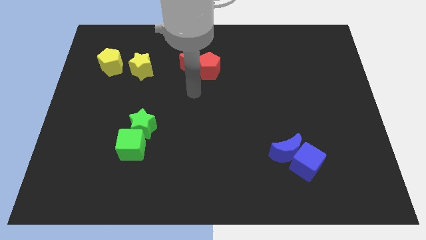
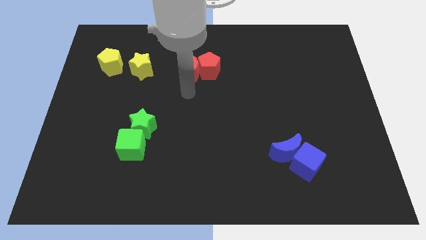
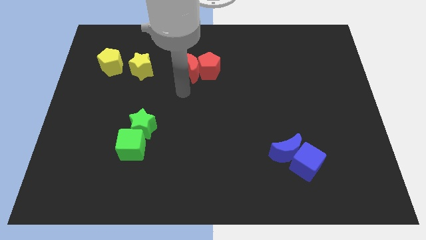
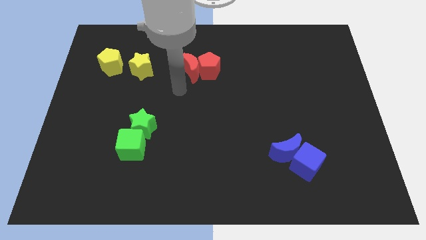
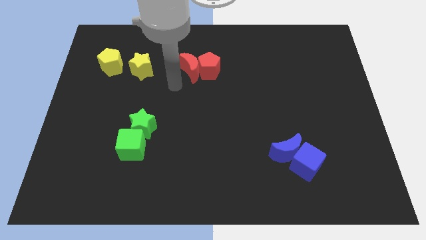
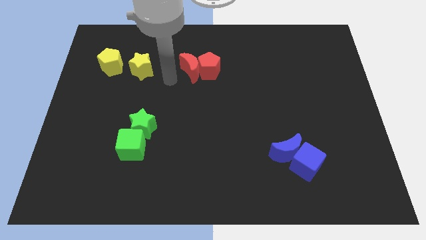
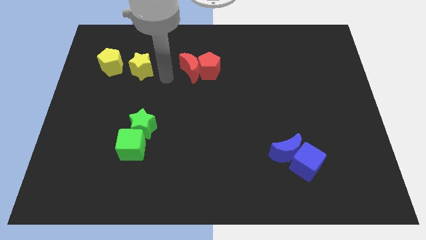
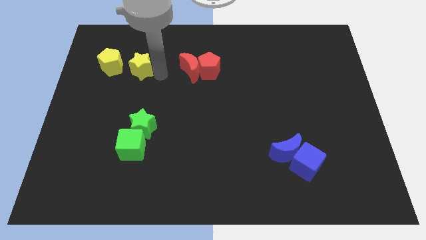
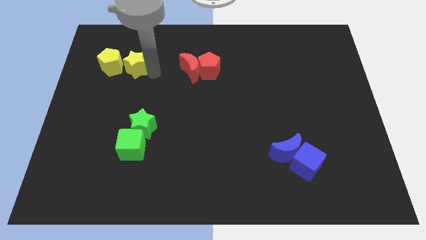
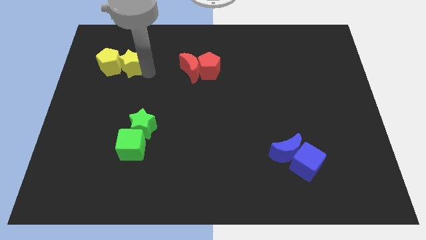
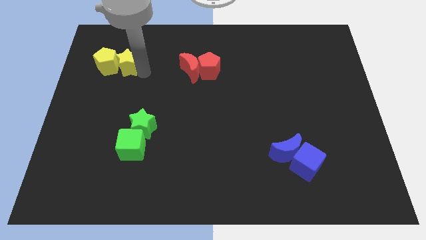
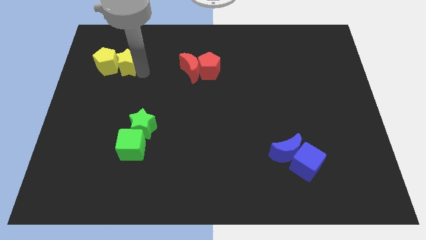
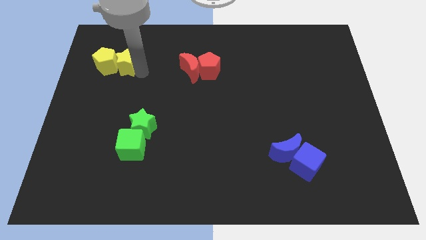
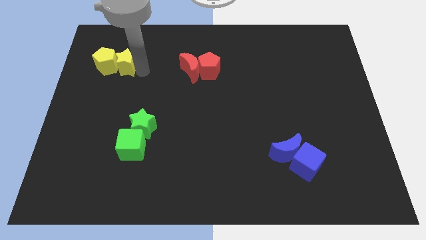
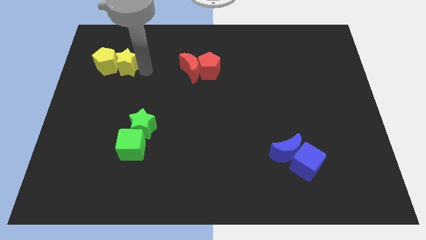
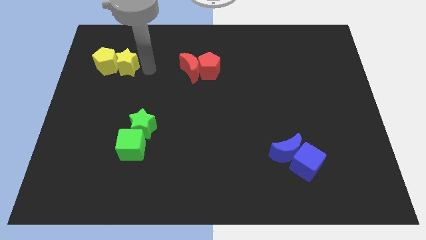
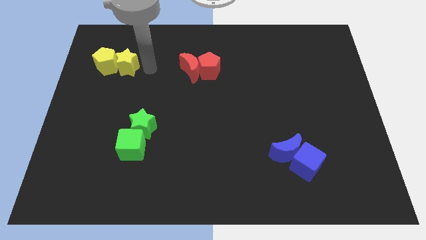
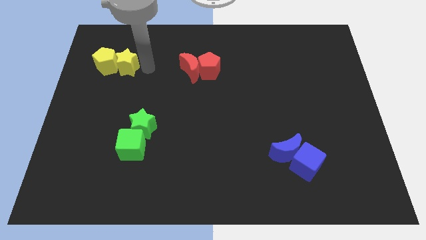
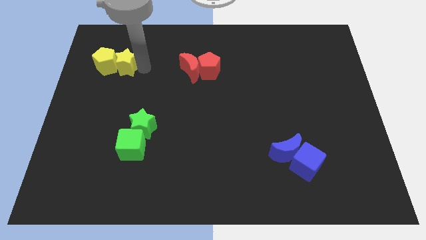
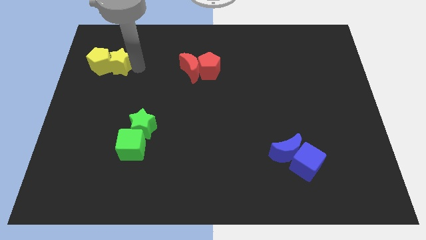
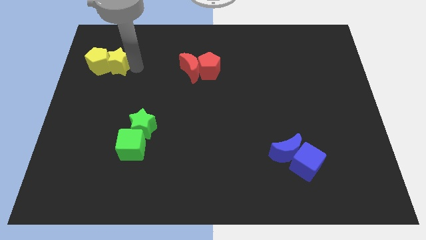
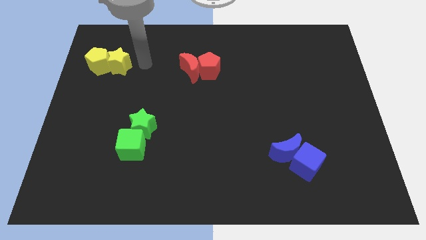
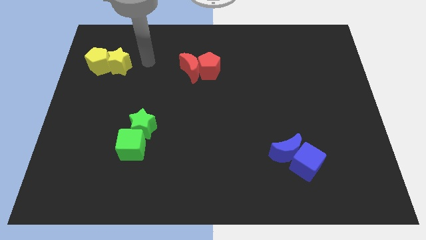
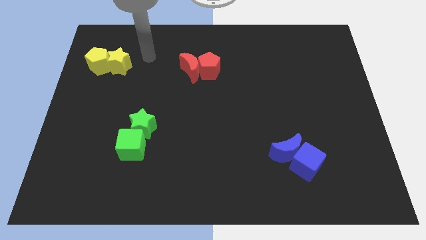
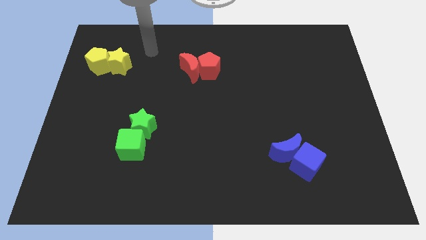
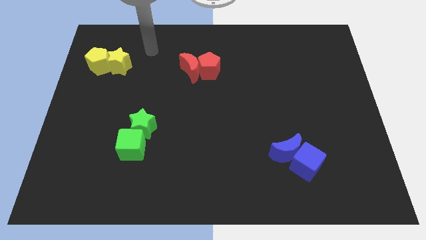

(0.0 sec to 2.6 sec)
slightly push yellow pentagon with yellow star

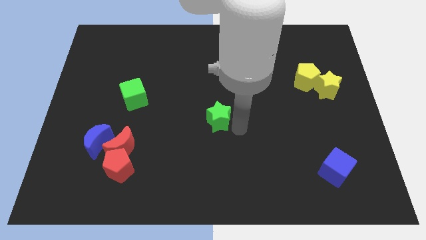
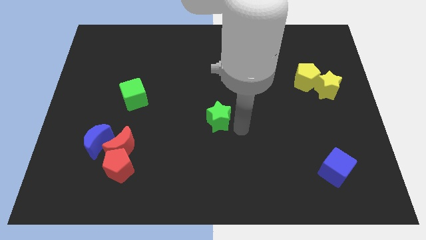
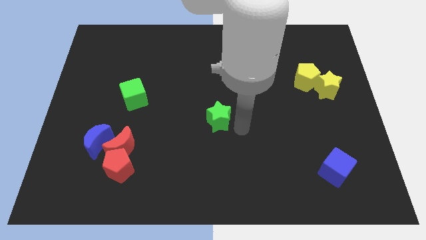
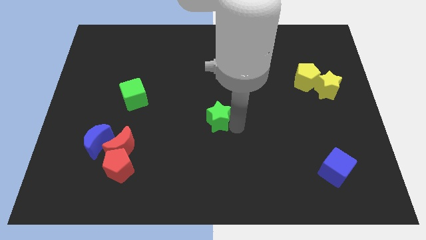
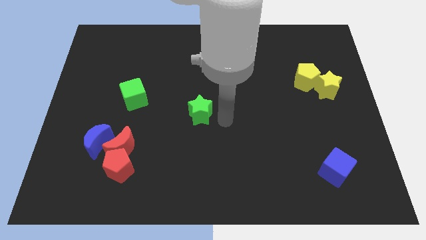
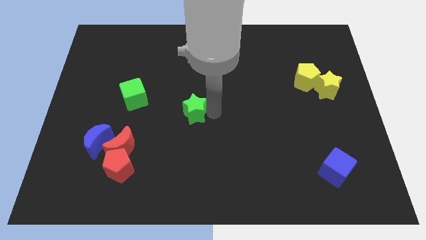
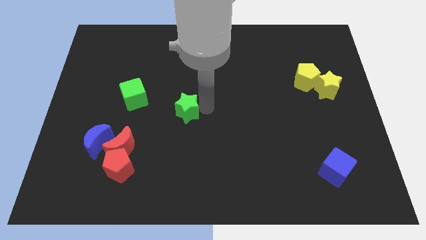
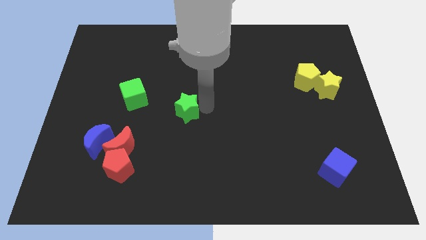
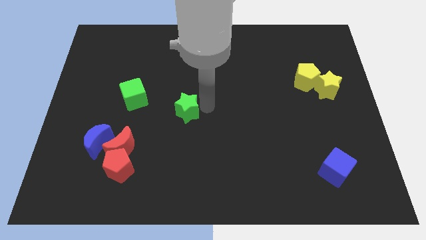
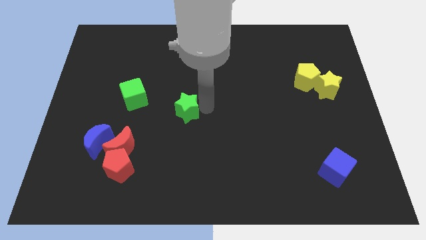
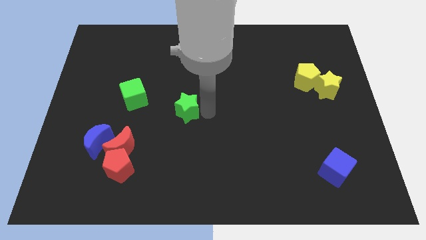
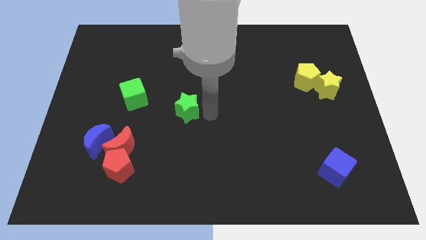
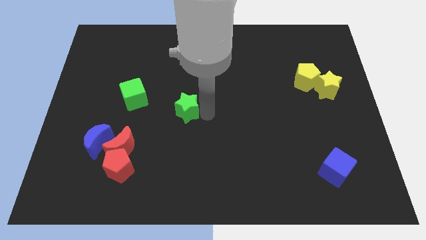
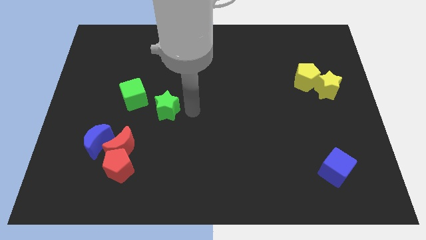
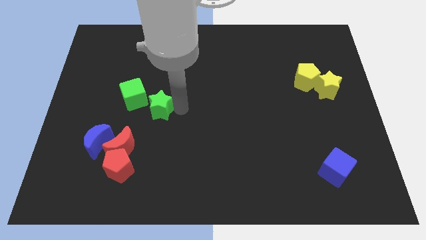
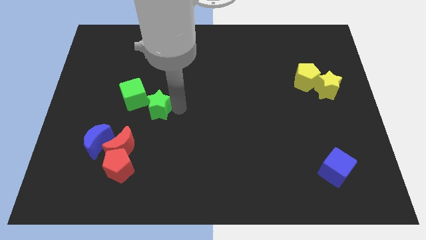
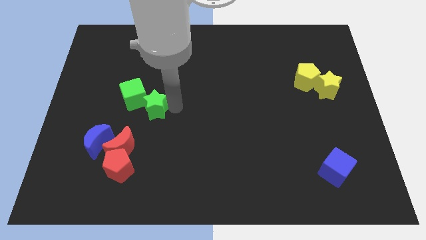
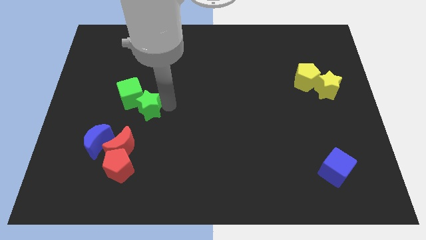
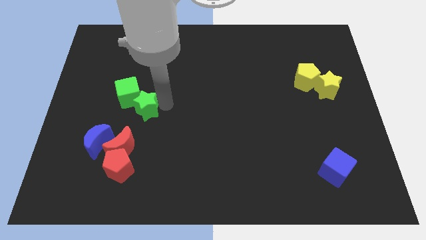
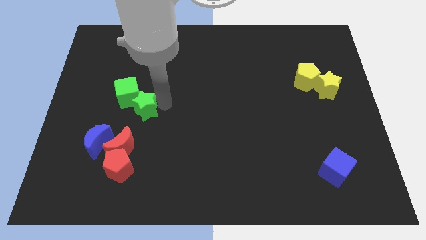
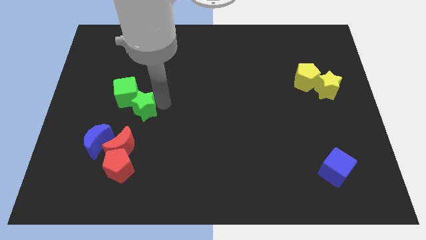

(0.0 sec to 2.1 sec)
move the green star to the right bottom of the green cube

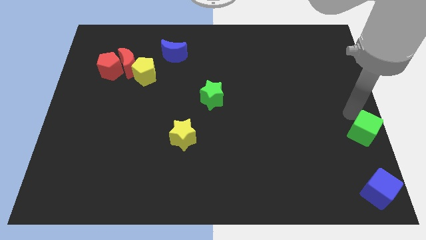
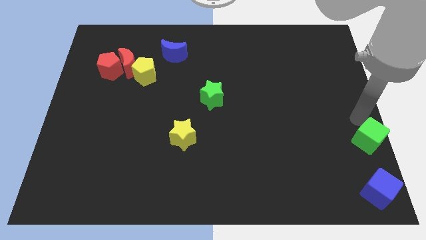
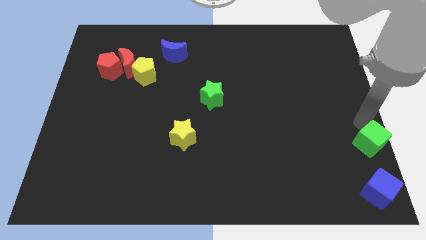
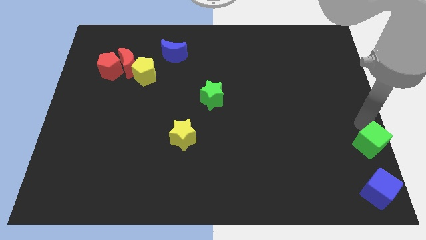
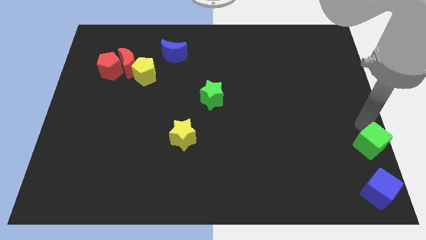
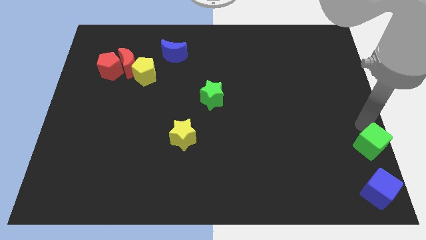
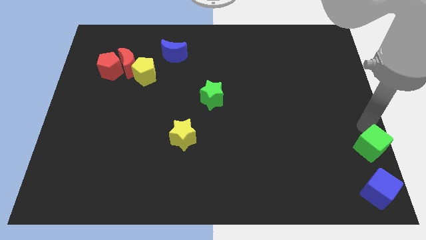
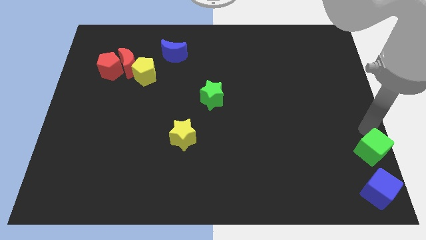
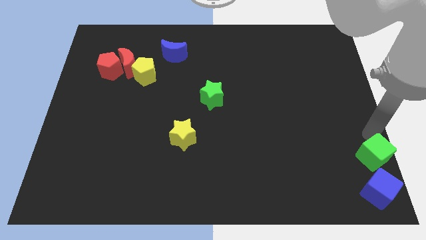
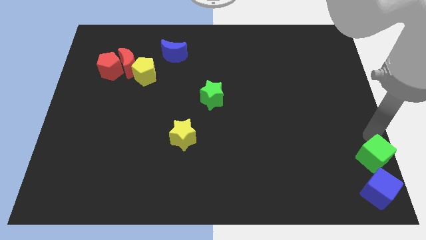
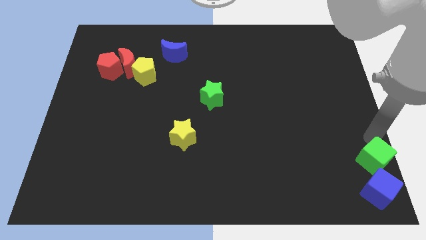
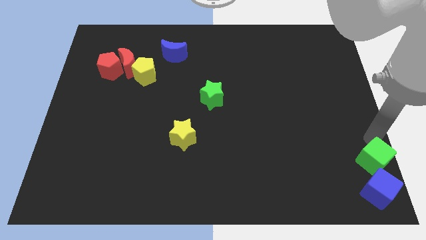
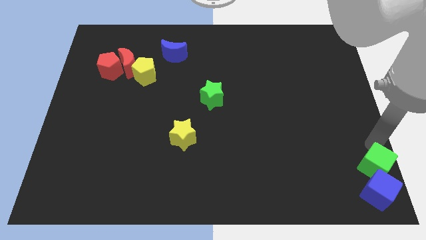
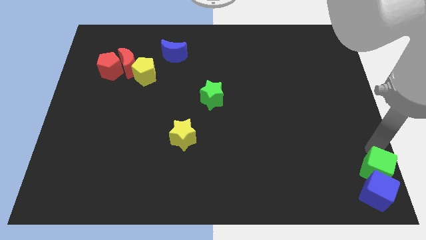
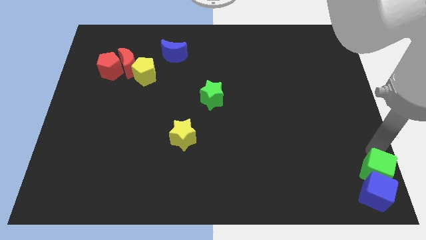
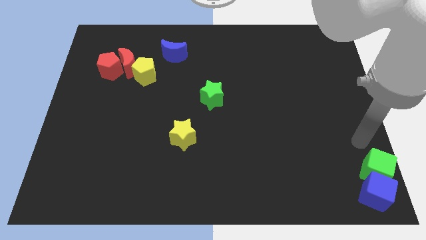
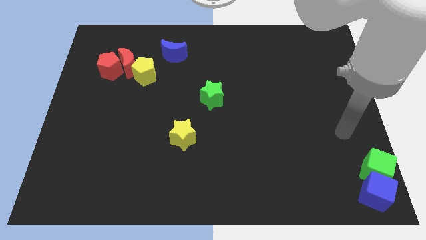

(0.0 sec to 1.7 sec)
place the green cube to the top of the blue cube

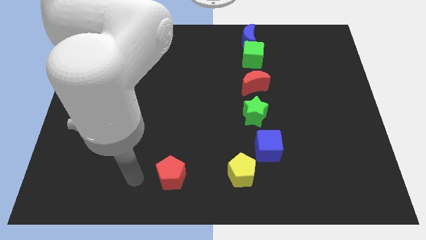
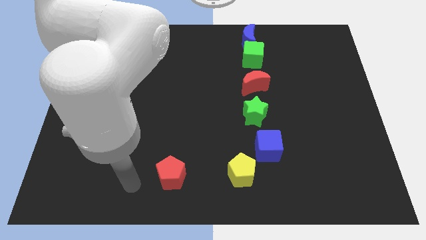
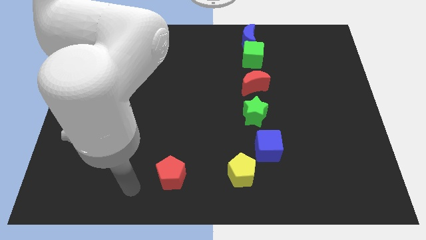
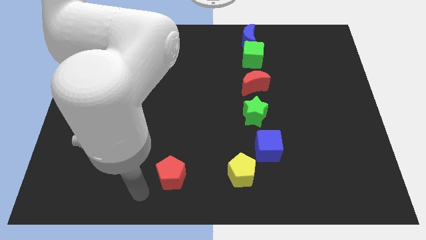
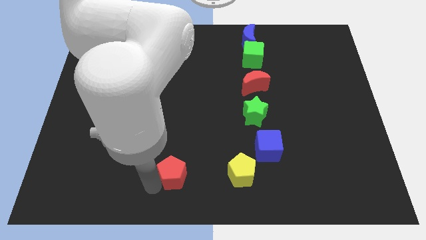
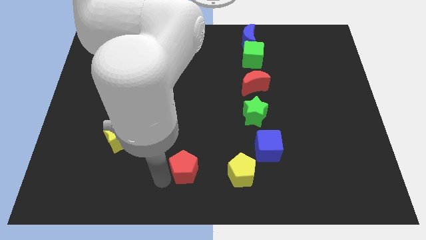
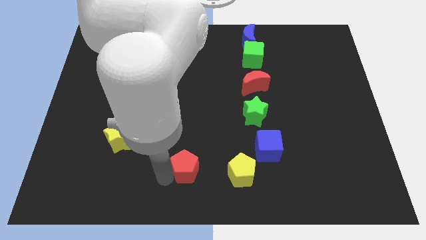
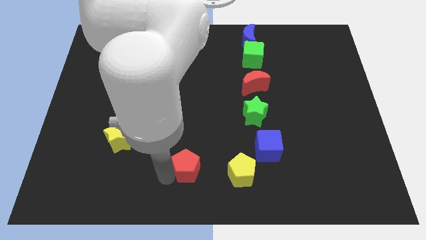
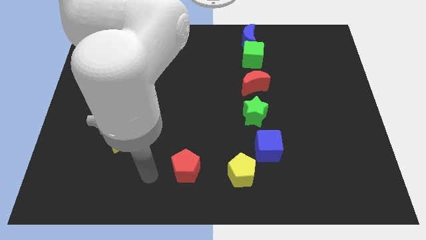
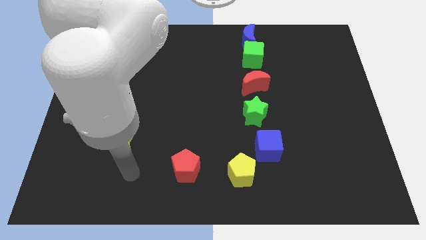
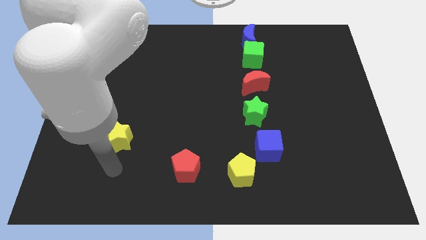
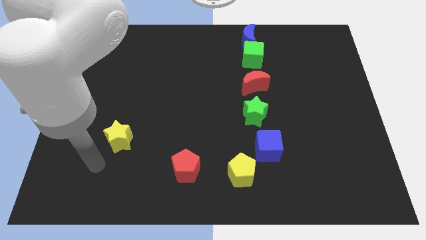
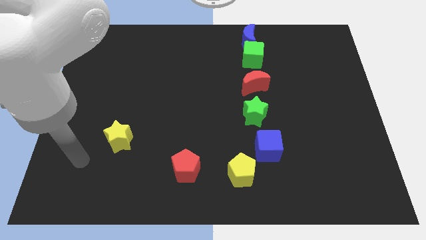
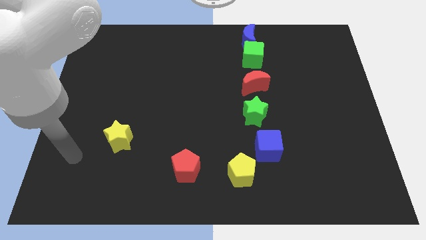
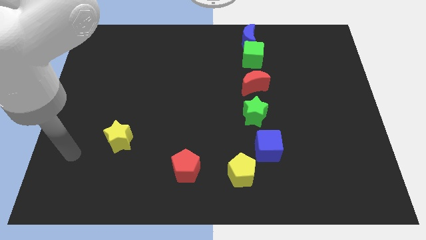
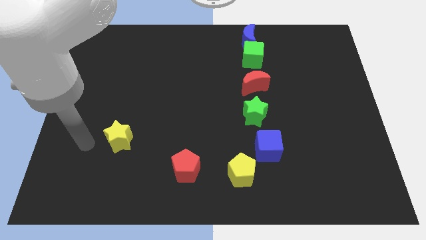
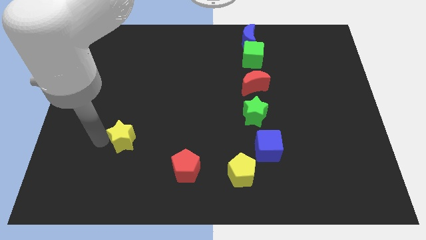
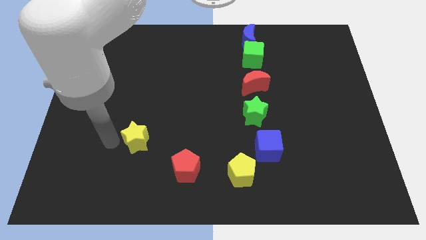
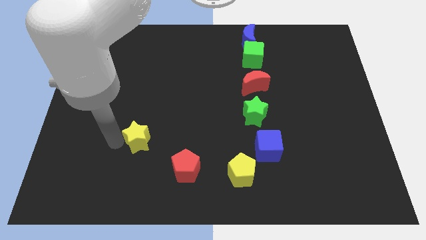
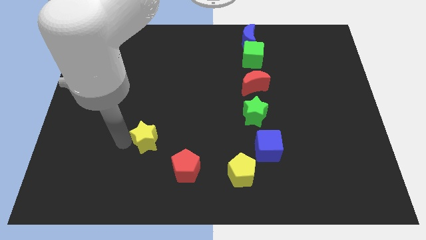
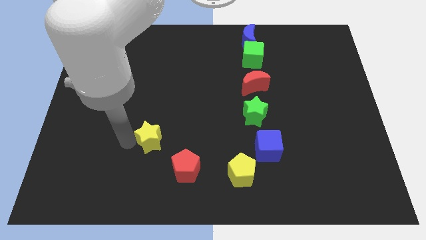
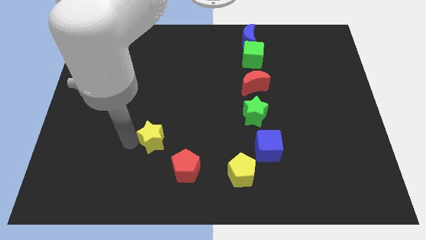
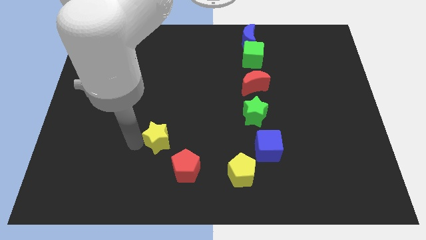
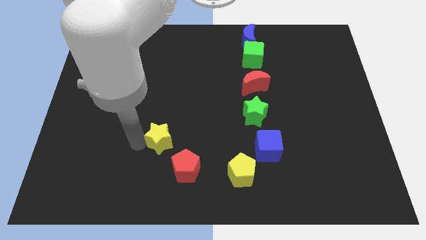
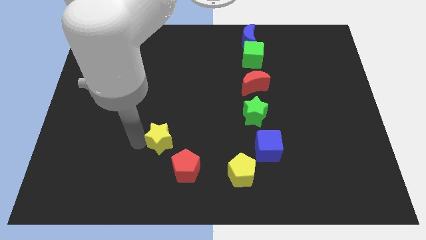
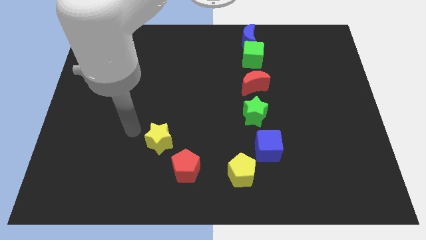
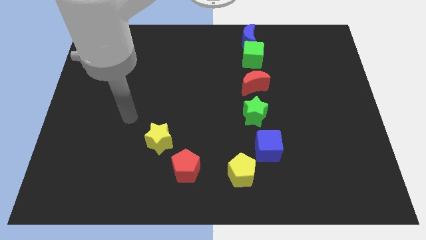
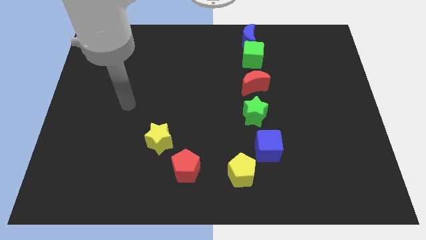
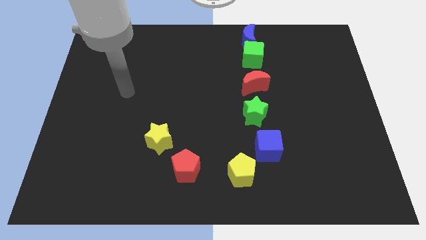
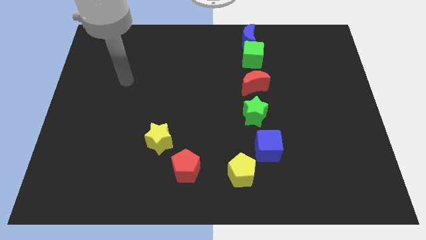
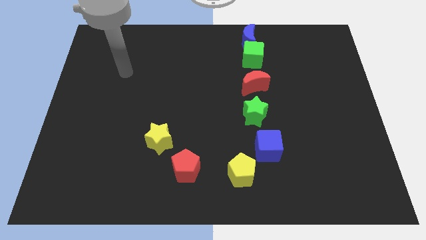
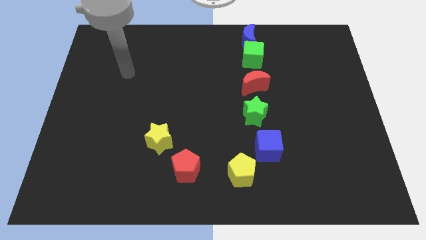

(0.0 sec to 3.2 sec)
push the yellow star to the top left of the red pentagon
